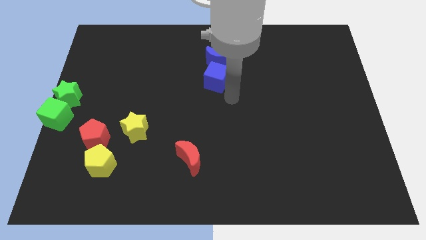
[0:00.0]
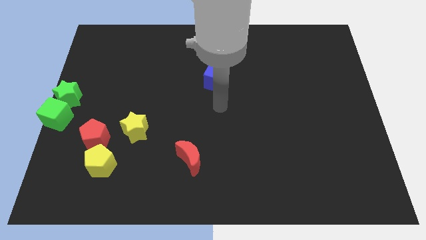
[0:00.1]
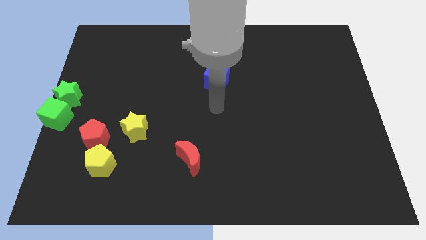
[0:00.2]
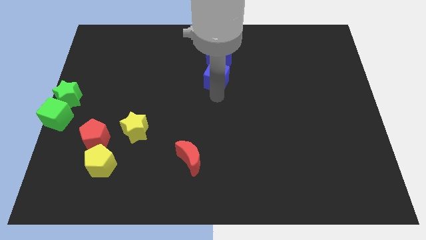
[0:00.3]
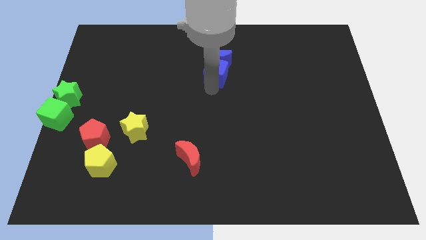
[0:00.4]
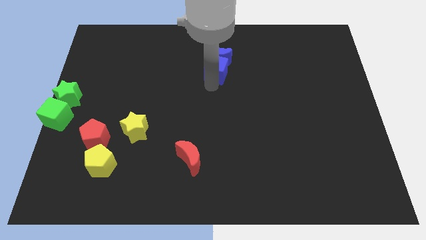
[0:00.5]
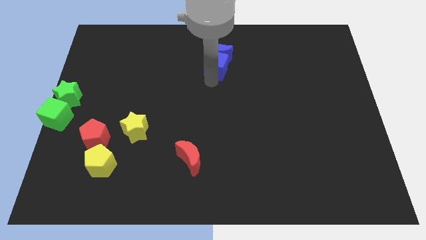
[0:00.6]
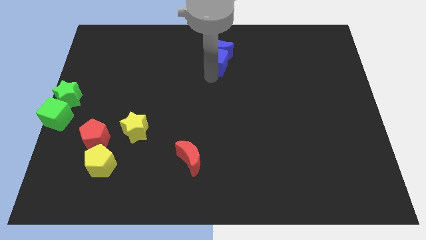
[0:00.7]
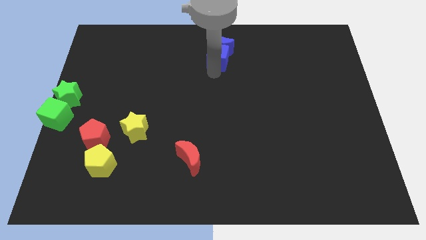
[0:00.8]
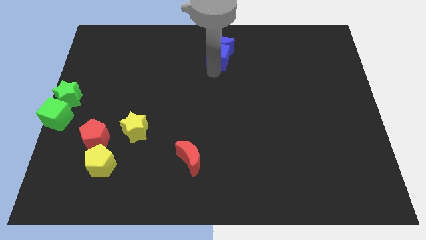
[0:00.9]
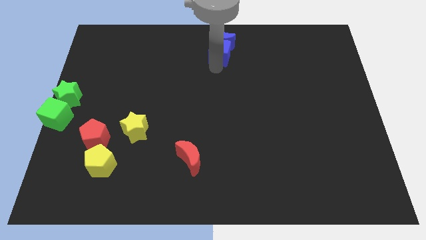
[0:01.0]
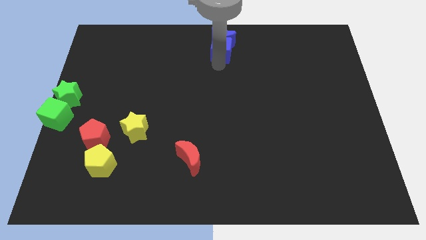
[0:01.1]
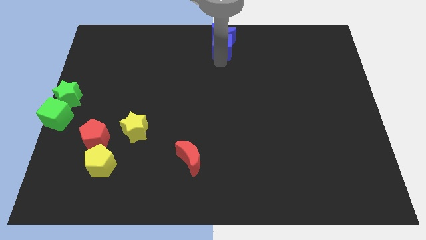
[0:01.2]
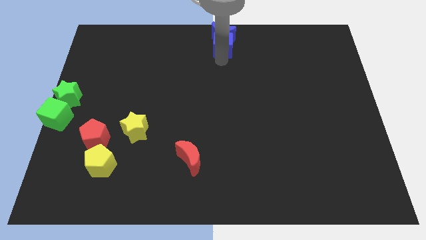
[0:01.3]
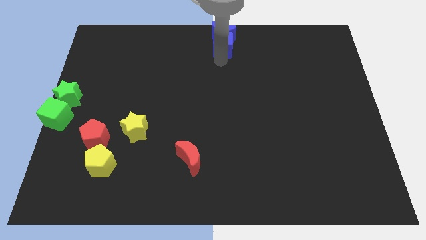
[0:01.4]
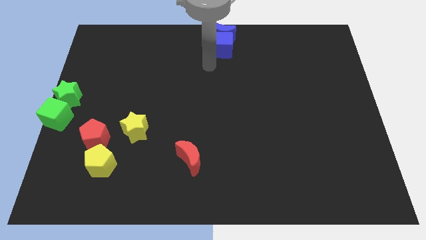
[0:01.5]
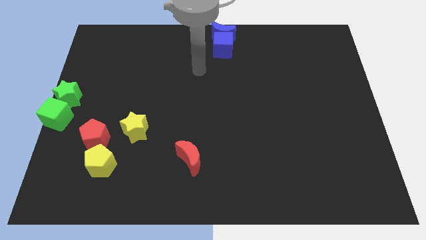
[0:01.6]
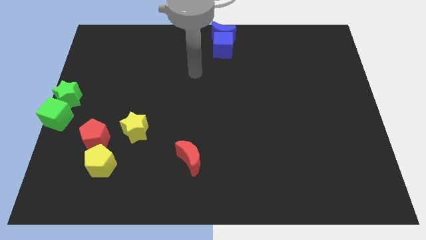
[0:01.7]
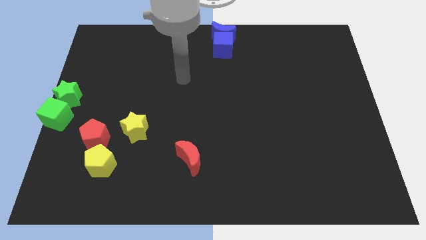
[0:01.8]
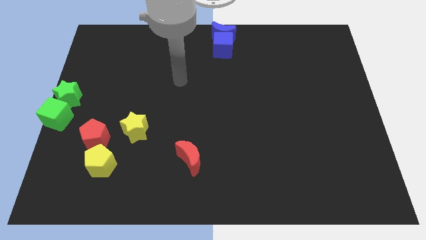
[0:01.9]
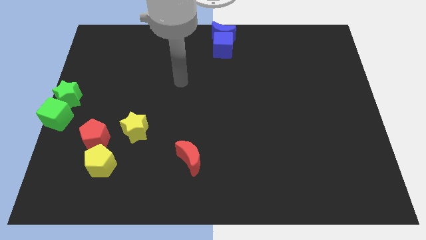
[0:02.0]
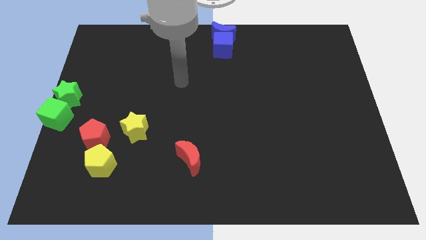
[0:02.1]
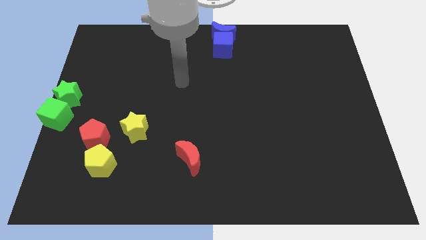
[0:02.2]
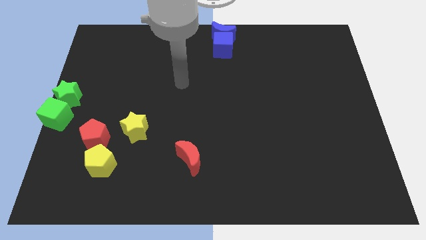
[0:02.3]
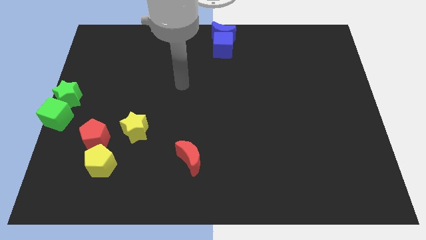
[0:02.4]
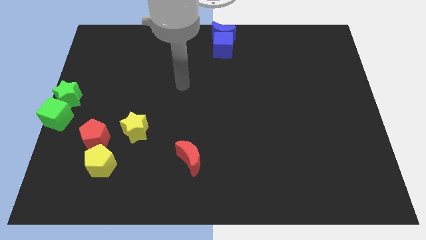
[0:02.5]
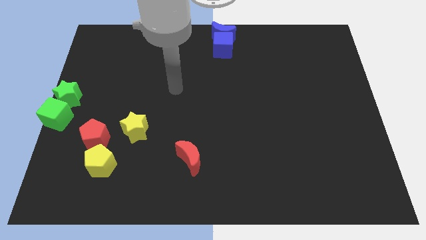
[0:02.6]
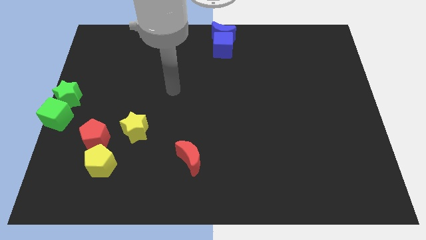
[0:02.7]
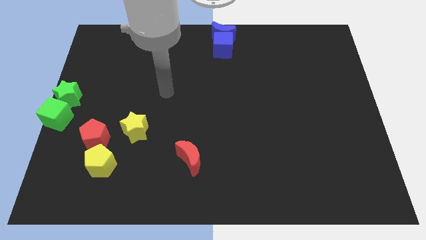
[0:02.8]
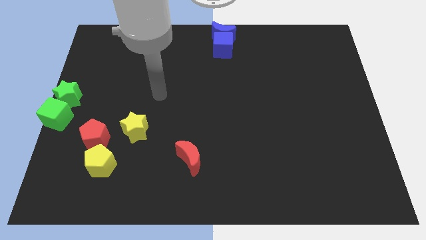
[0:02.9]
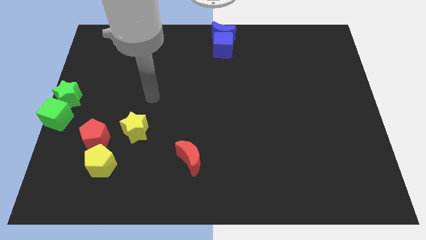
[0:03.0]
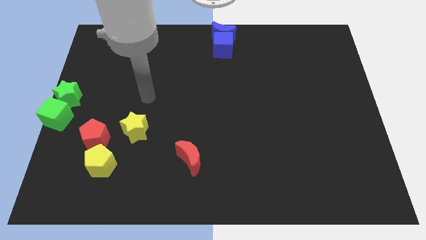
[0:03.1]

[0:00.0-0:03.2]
put both the blue blocks at the top center

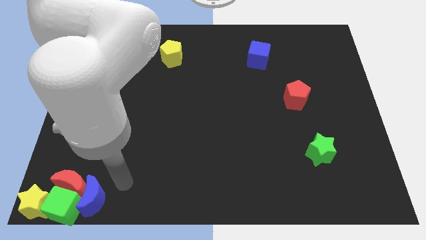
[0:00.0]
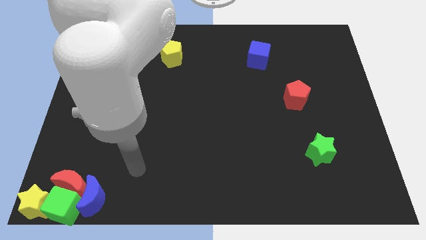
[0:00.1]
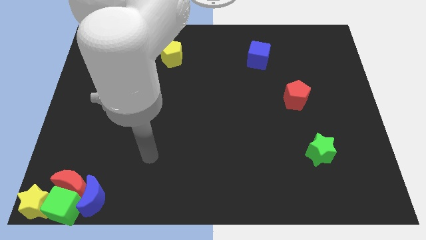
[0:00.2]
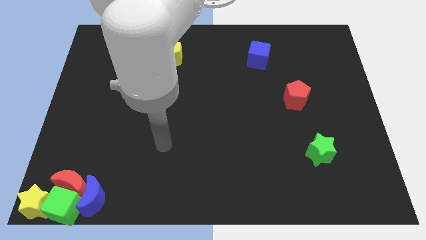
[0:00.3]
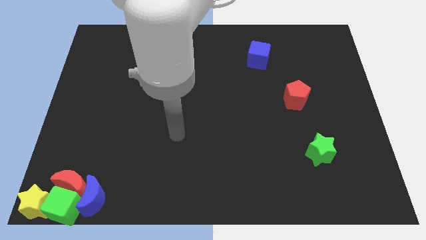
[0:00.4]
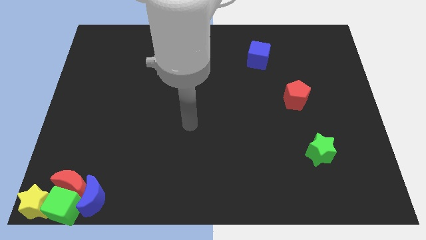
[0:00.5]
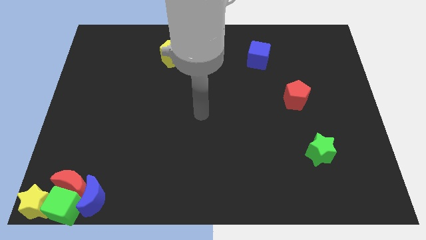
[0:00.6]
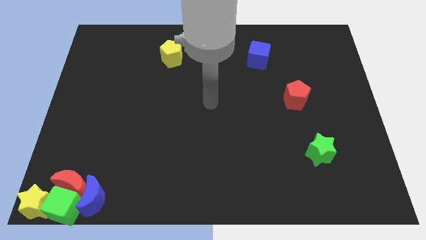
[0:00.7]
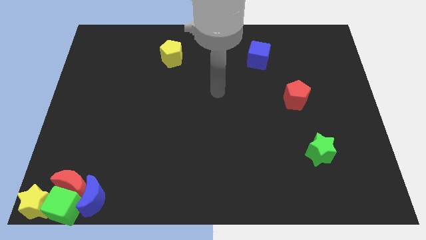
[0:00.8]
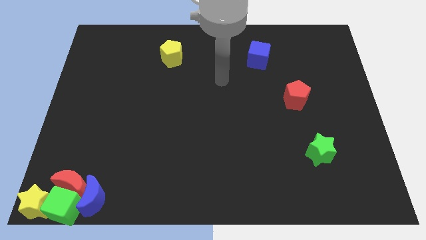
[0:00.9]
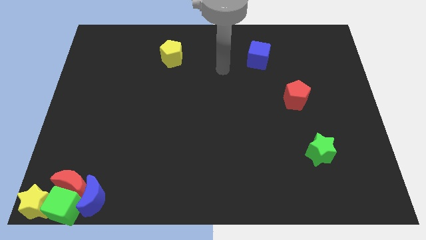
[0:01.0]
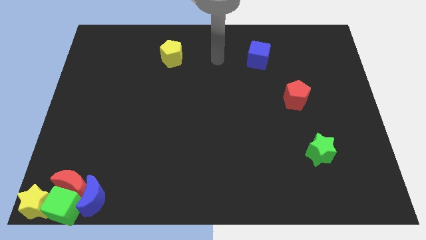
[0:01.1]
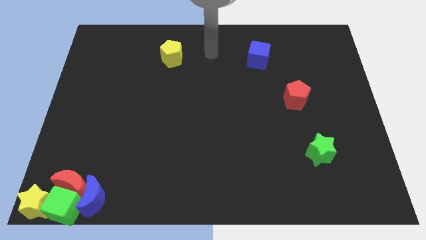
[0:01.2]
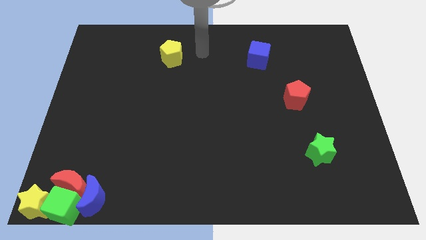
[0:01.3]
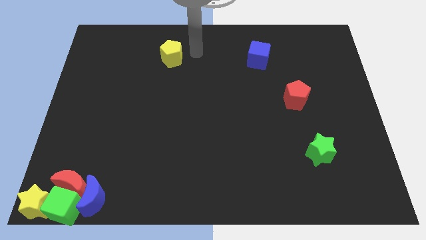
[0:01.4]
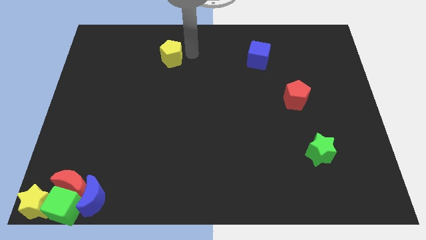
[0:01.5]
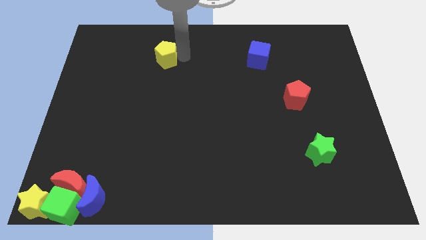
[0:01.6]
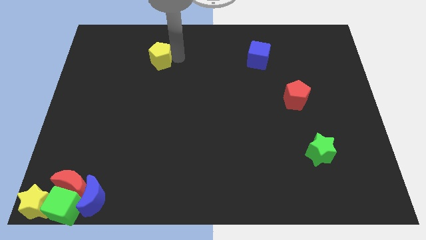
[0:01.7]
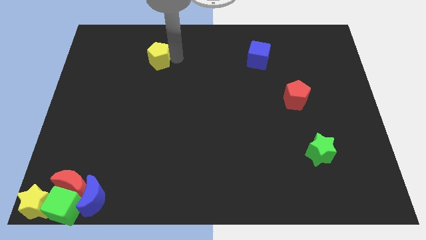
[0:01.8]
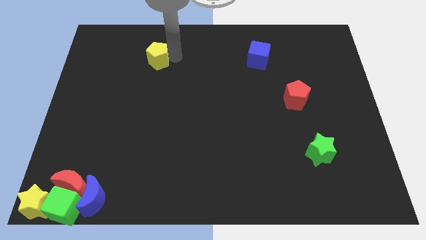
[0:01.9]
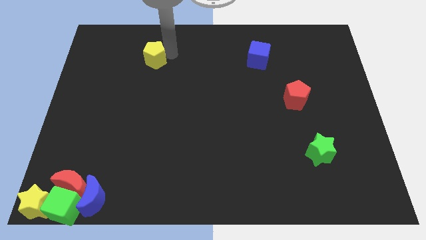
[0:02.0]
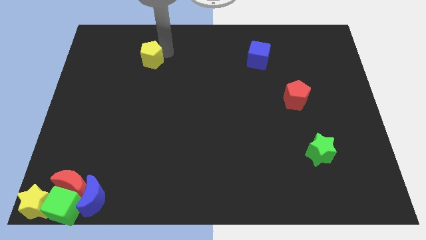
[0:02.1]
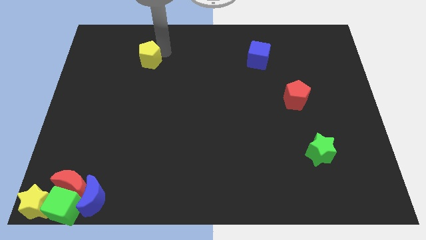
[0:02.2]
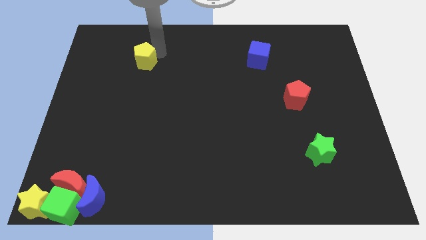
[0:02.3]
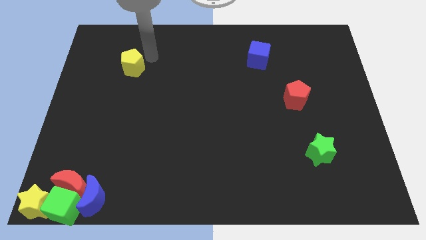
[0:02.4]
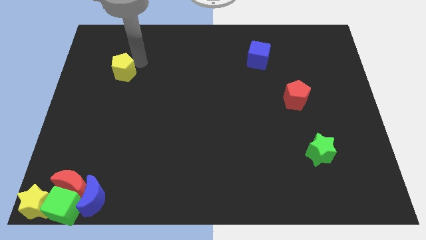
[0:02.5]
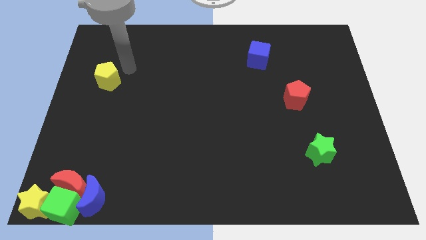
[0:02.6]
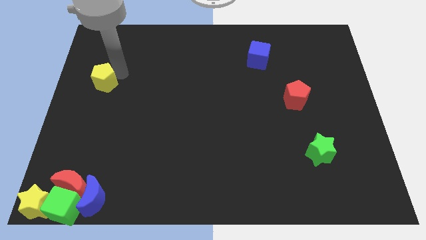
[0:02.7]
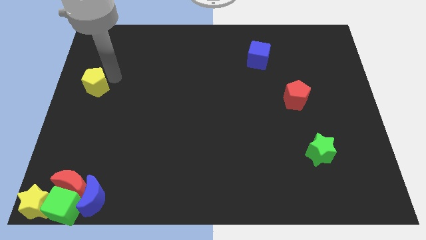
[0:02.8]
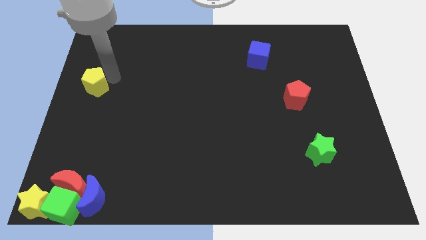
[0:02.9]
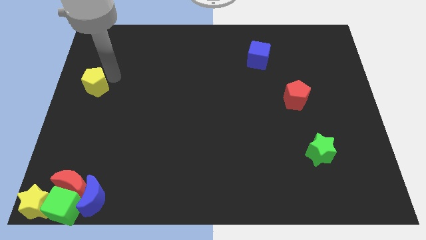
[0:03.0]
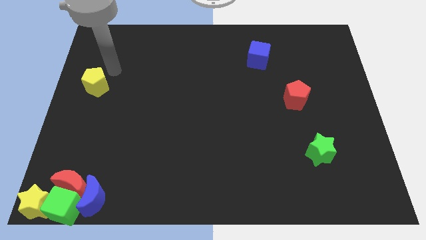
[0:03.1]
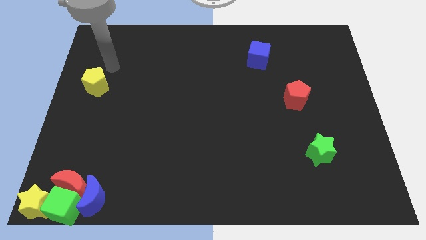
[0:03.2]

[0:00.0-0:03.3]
place the yellow pentagon above the red crescent

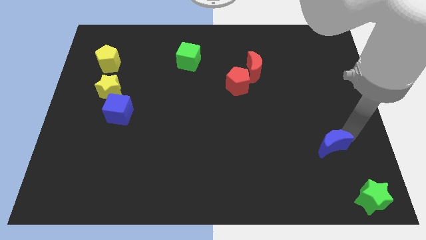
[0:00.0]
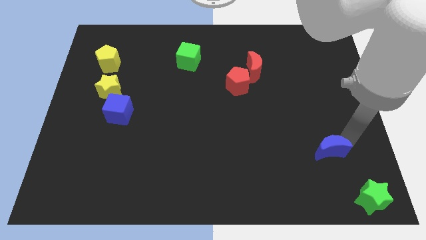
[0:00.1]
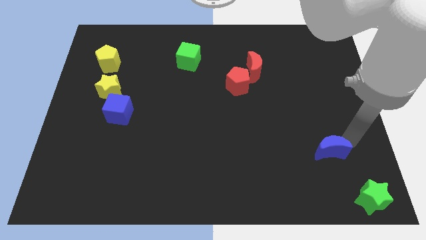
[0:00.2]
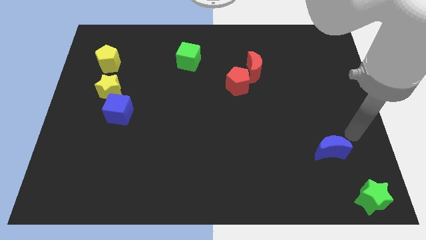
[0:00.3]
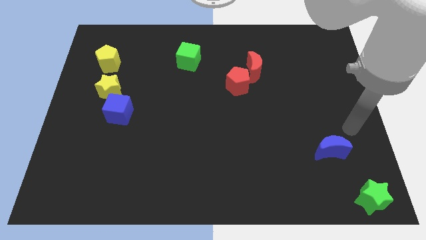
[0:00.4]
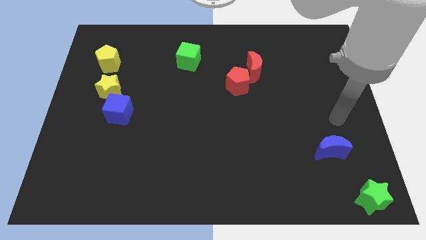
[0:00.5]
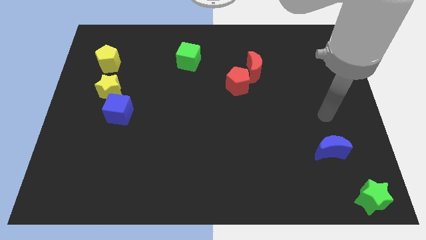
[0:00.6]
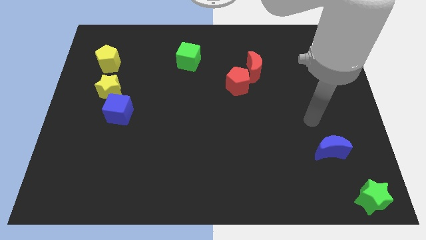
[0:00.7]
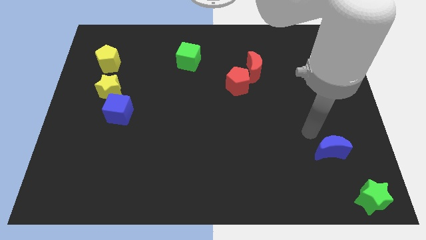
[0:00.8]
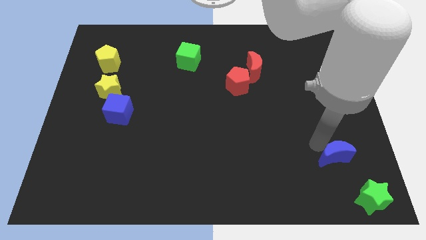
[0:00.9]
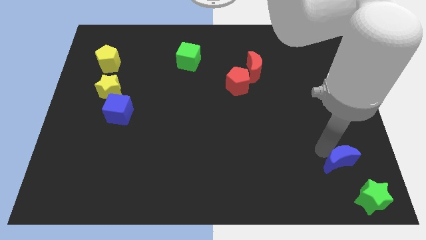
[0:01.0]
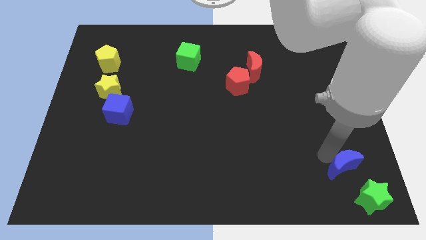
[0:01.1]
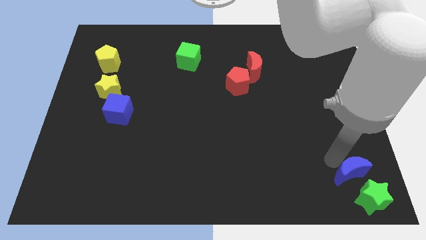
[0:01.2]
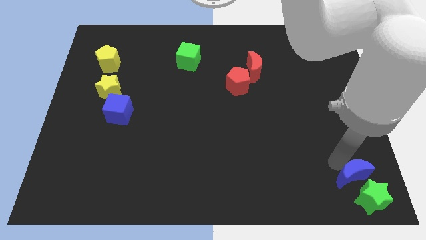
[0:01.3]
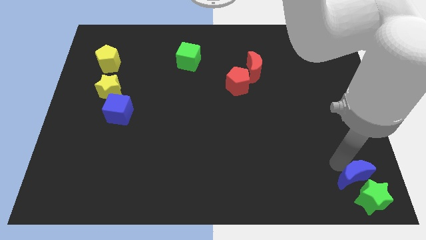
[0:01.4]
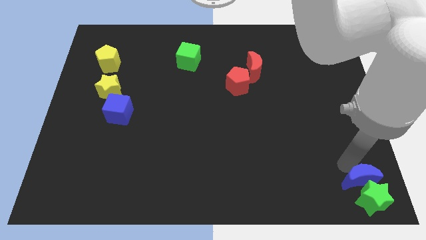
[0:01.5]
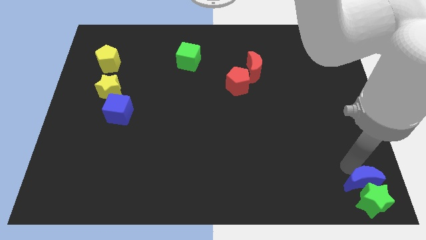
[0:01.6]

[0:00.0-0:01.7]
move blue moon into the green star

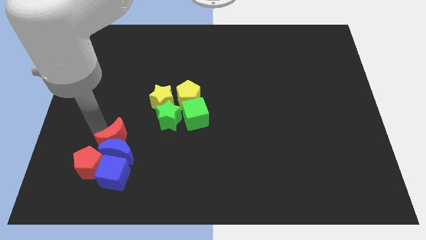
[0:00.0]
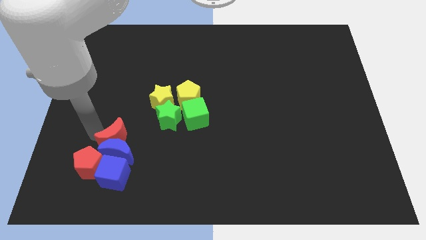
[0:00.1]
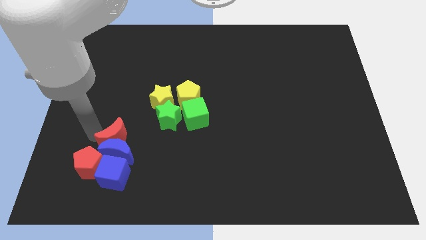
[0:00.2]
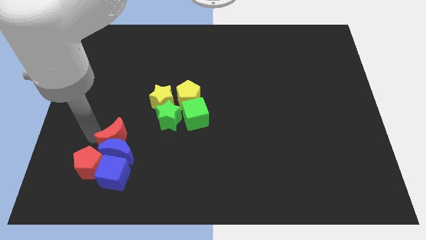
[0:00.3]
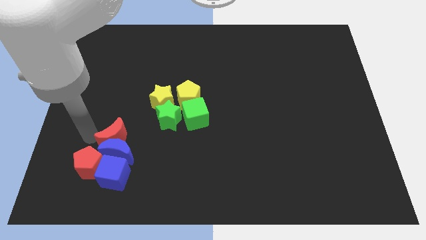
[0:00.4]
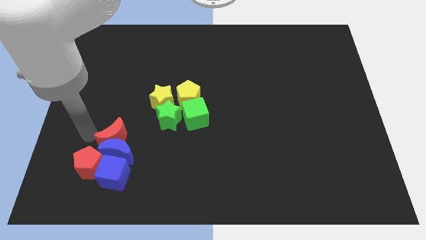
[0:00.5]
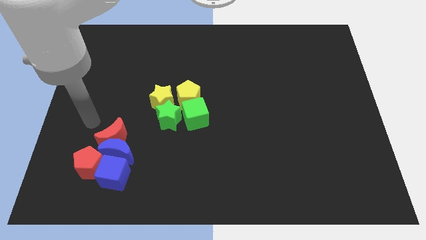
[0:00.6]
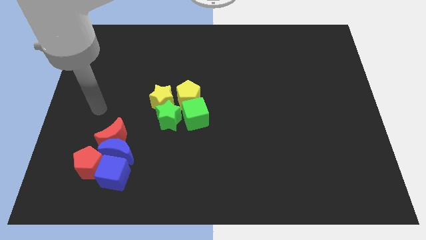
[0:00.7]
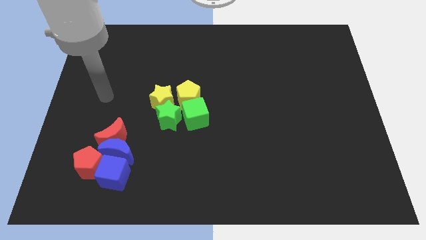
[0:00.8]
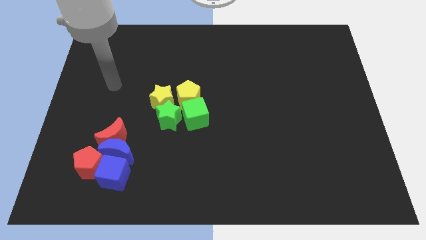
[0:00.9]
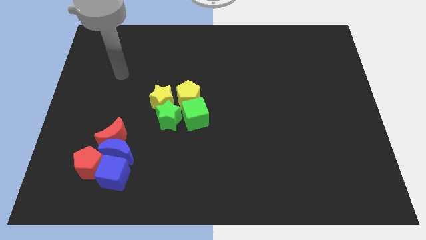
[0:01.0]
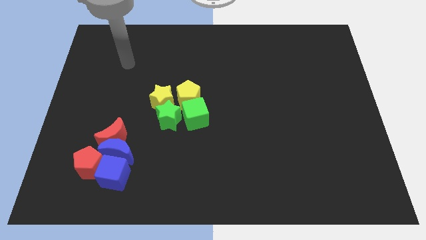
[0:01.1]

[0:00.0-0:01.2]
move the arm towards top
